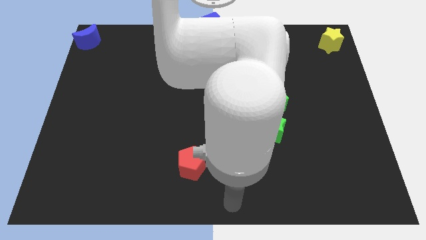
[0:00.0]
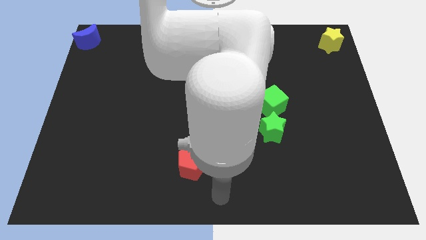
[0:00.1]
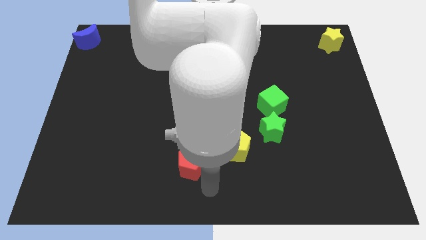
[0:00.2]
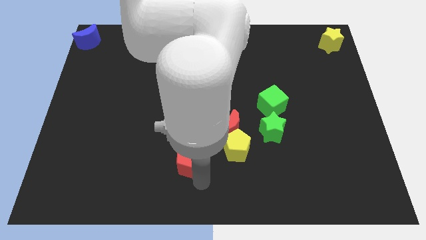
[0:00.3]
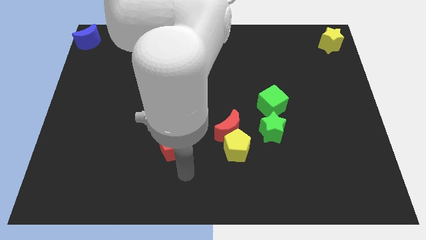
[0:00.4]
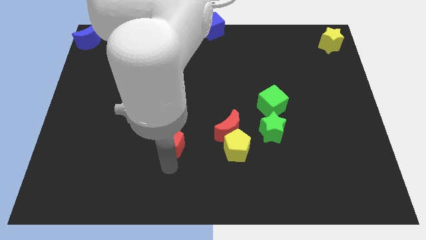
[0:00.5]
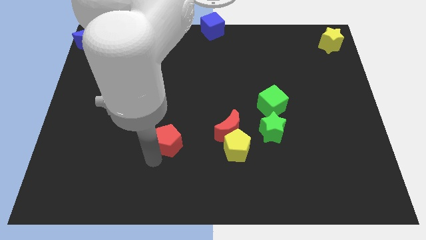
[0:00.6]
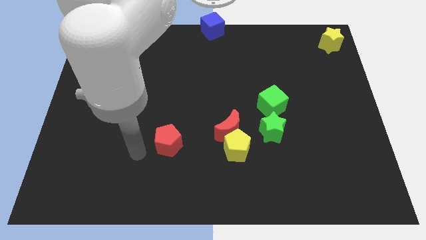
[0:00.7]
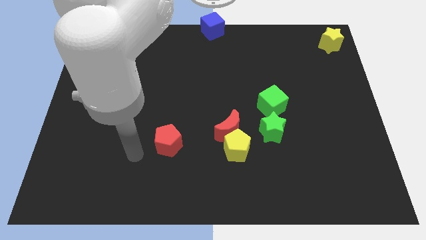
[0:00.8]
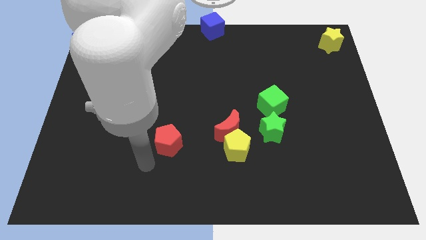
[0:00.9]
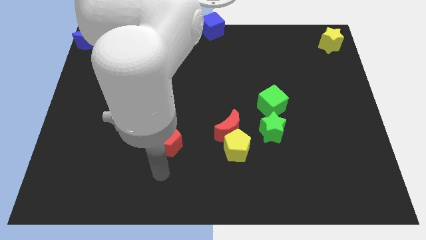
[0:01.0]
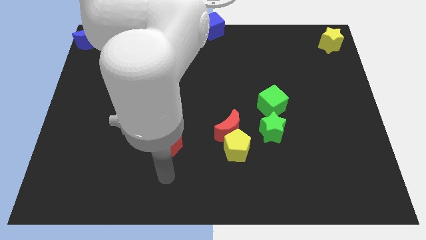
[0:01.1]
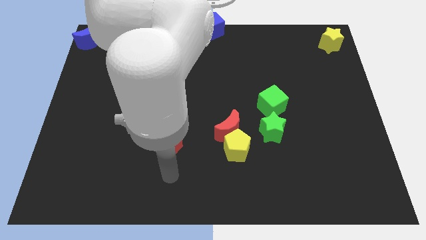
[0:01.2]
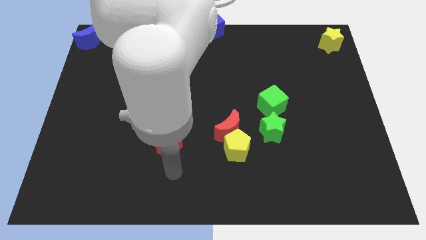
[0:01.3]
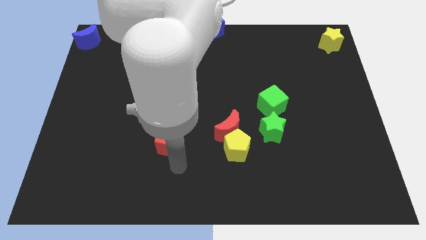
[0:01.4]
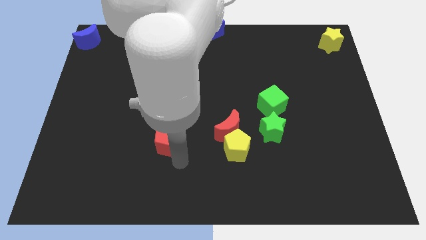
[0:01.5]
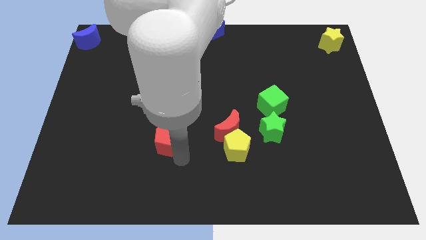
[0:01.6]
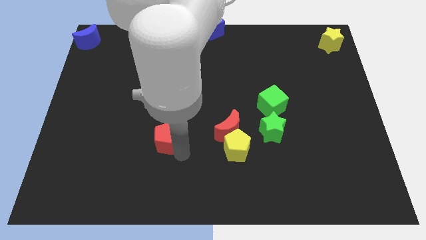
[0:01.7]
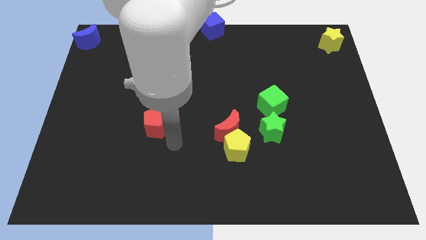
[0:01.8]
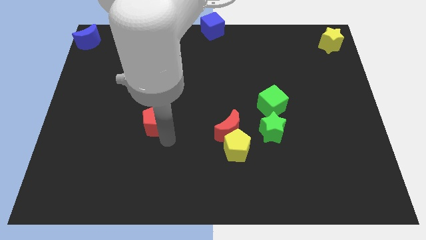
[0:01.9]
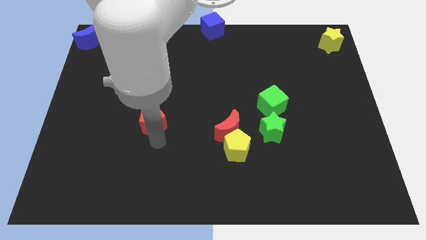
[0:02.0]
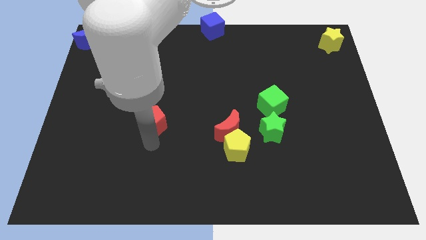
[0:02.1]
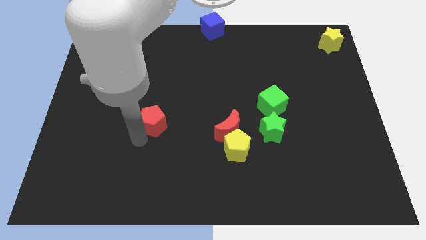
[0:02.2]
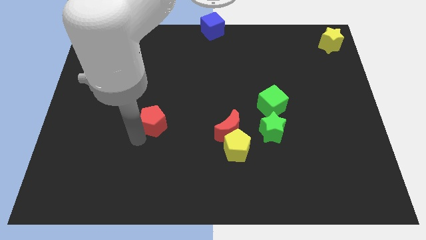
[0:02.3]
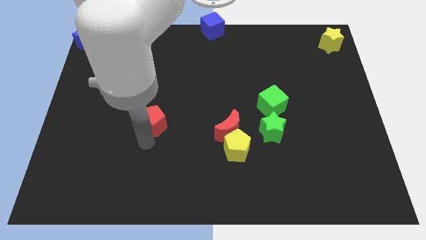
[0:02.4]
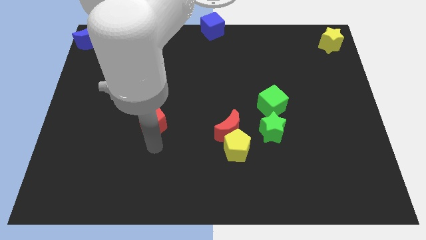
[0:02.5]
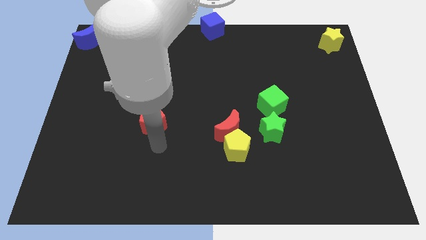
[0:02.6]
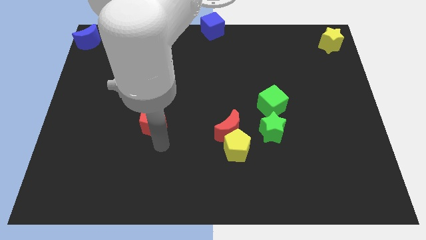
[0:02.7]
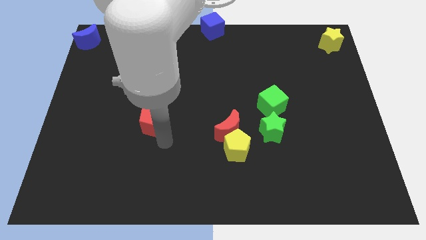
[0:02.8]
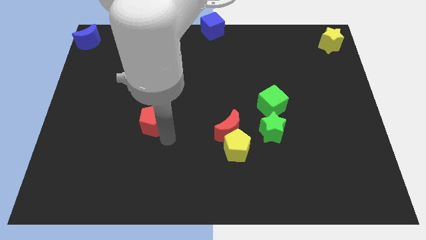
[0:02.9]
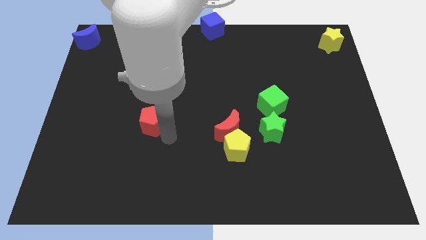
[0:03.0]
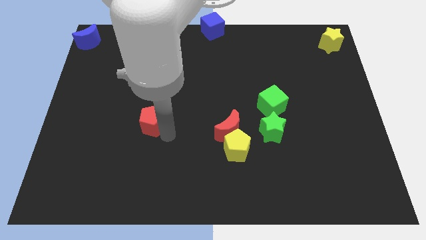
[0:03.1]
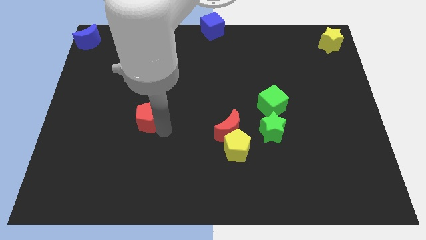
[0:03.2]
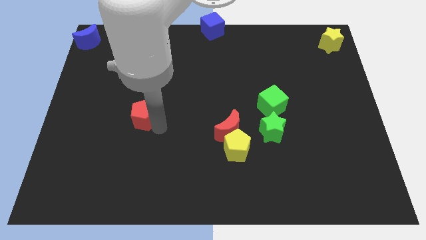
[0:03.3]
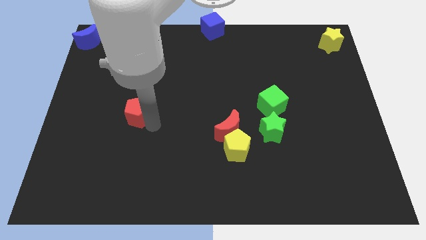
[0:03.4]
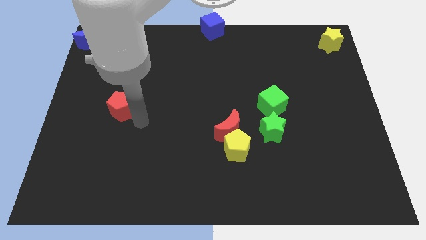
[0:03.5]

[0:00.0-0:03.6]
move the red pentagon slightly towards the center left of the board

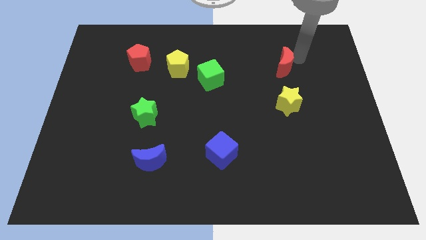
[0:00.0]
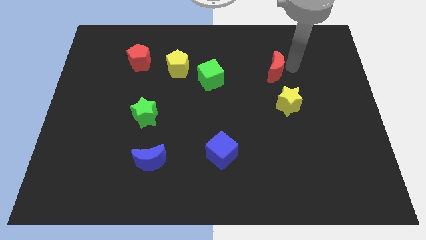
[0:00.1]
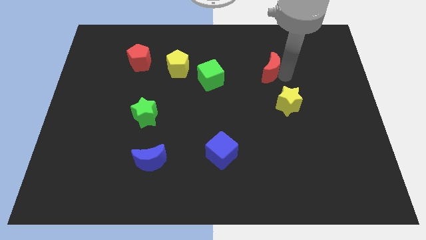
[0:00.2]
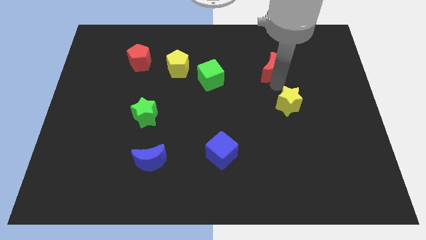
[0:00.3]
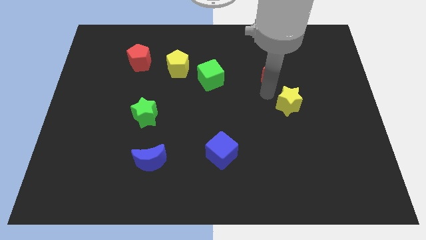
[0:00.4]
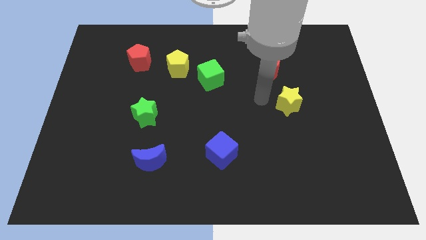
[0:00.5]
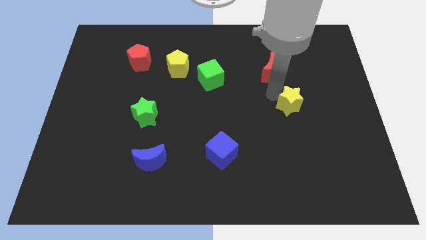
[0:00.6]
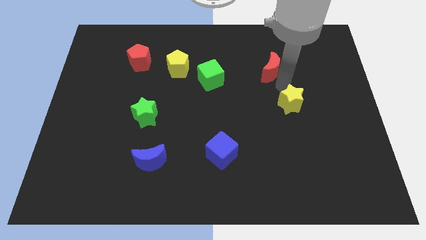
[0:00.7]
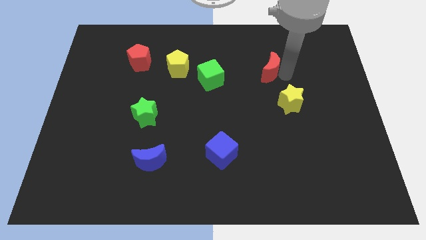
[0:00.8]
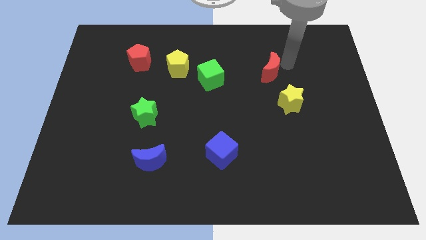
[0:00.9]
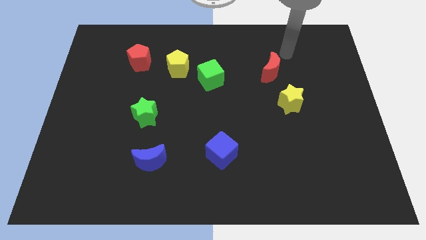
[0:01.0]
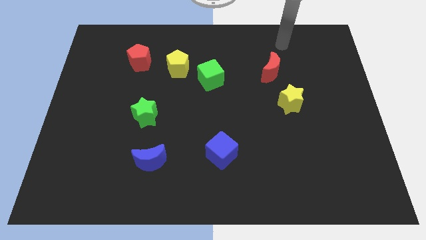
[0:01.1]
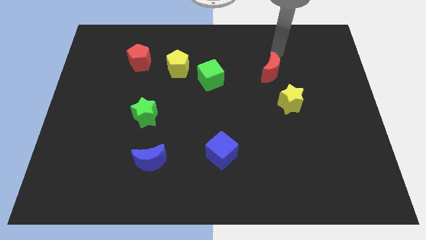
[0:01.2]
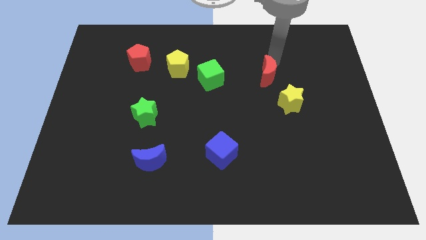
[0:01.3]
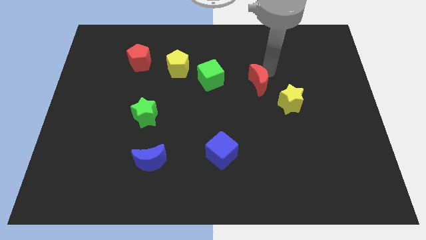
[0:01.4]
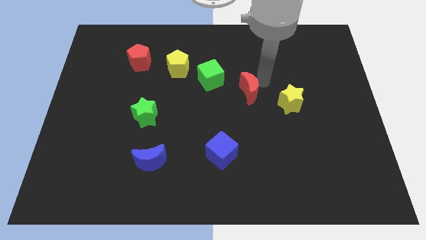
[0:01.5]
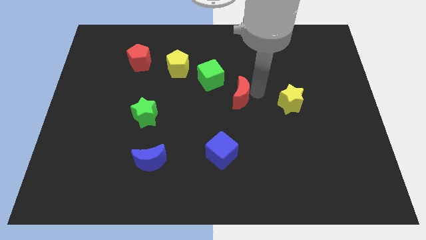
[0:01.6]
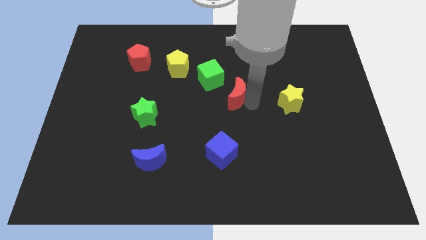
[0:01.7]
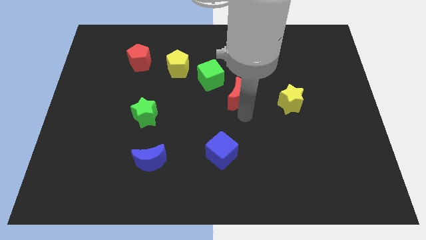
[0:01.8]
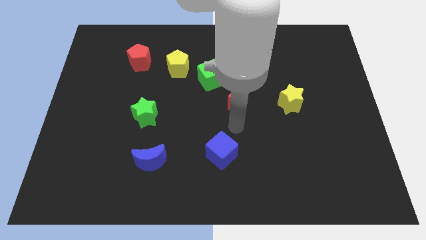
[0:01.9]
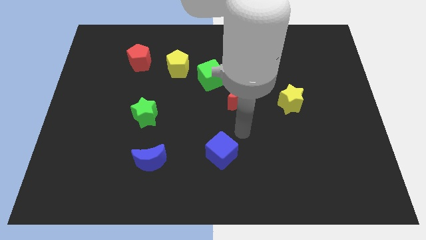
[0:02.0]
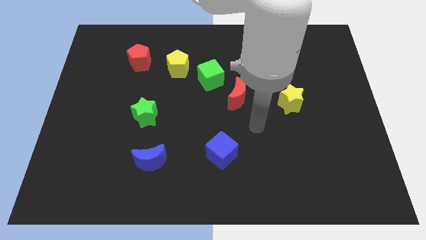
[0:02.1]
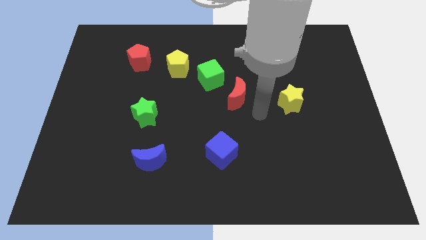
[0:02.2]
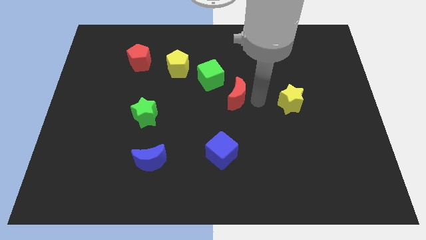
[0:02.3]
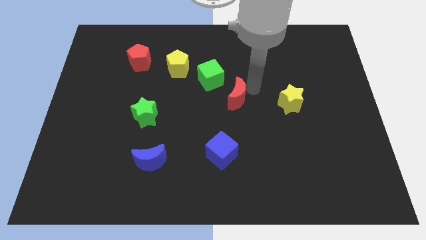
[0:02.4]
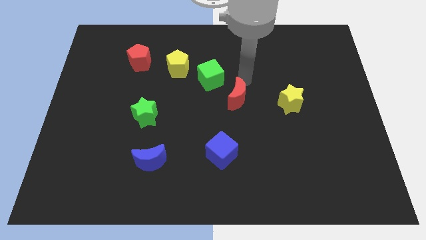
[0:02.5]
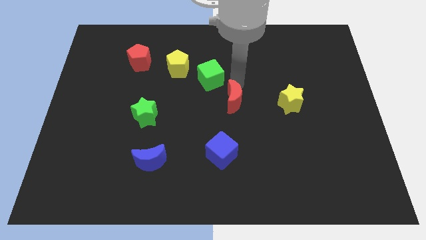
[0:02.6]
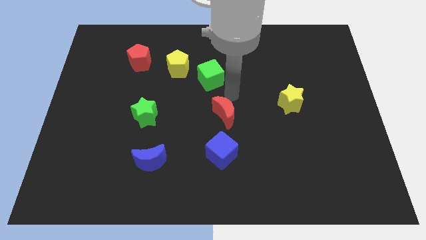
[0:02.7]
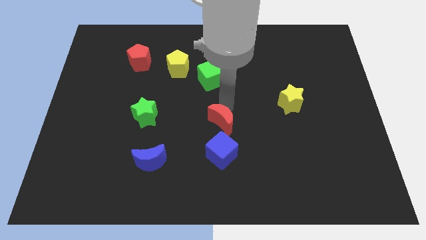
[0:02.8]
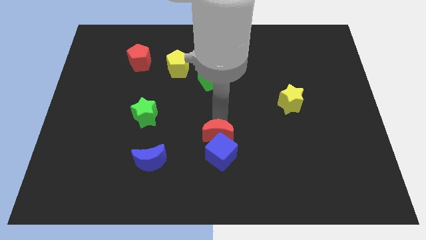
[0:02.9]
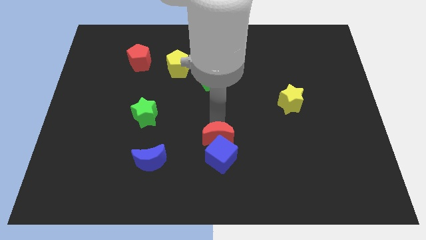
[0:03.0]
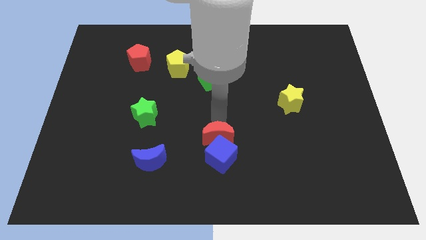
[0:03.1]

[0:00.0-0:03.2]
push red crescent above blue cube

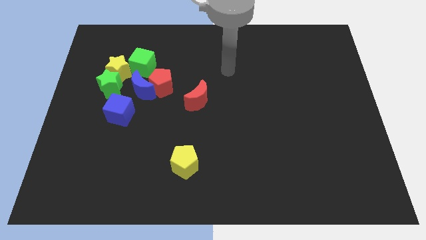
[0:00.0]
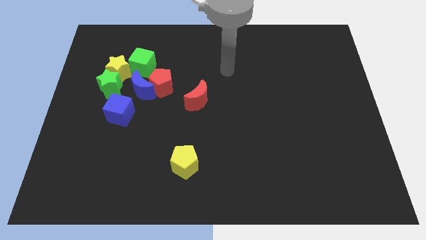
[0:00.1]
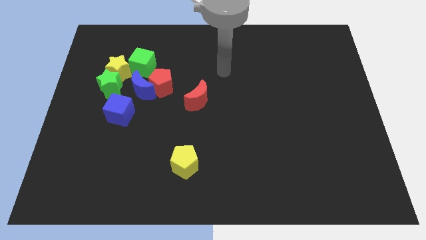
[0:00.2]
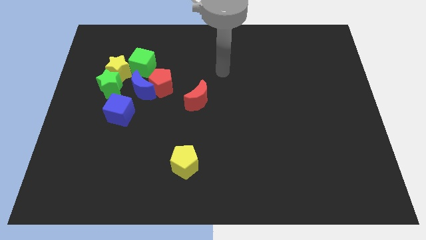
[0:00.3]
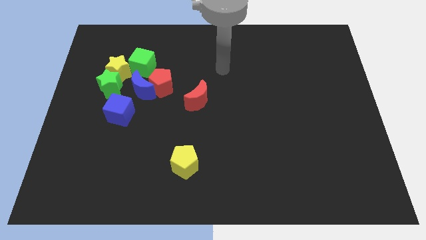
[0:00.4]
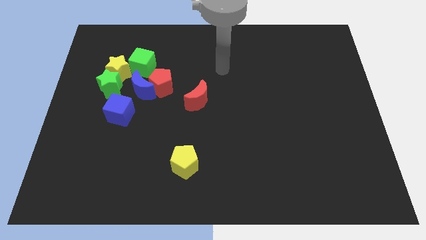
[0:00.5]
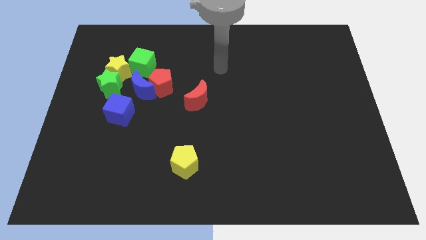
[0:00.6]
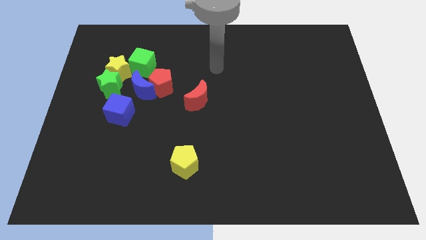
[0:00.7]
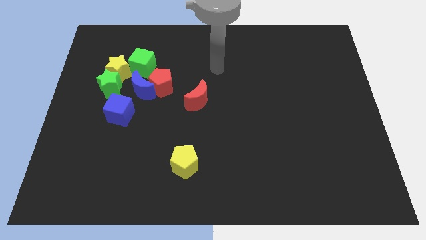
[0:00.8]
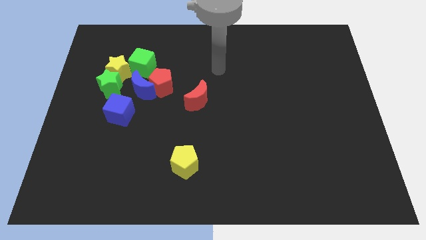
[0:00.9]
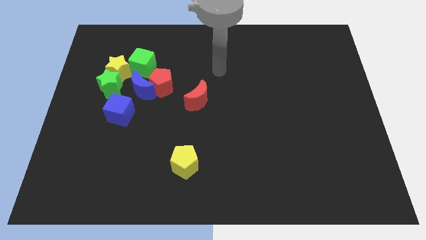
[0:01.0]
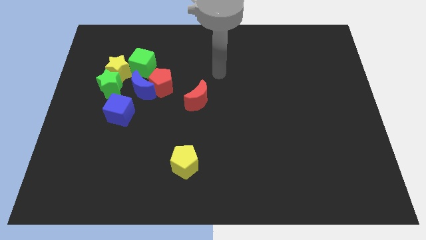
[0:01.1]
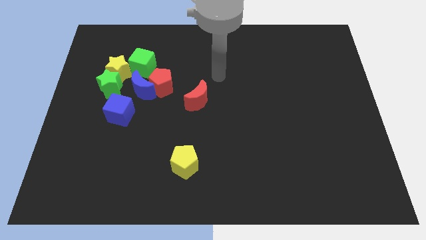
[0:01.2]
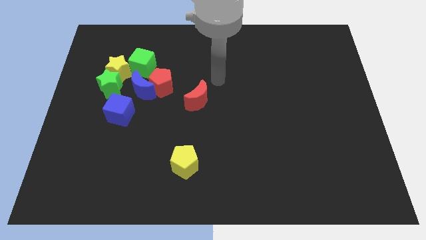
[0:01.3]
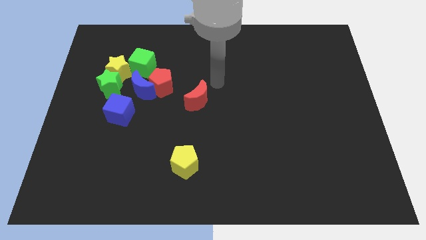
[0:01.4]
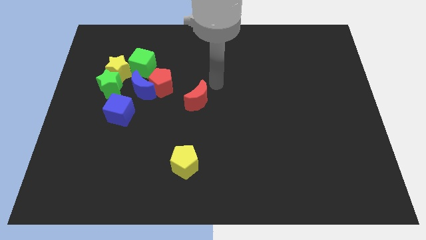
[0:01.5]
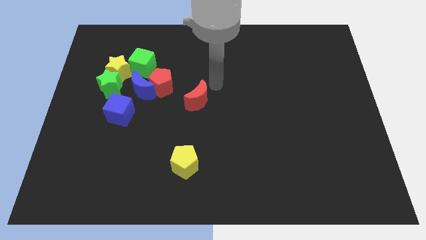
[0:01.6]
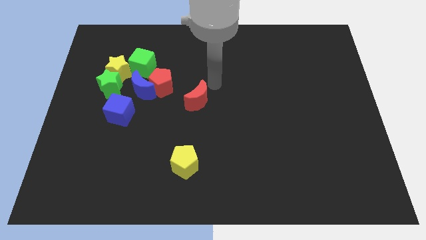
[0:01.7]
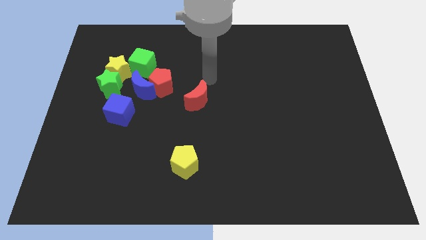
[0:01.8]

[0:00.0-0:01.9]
place your arm to the top of the red moon

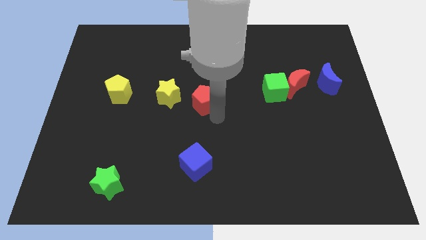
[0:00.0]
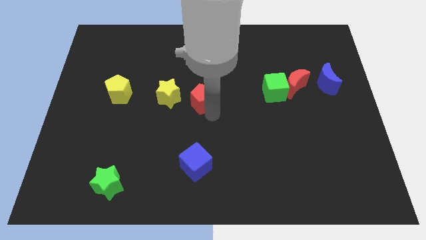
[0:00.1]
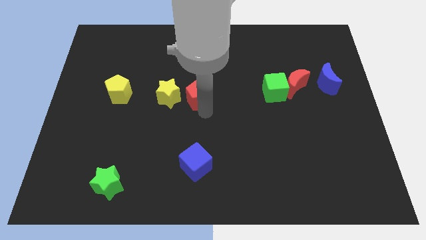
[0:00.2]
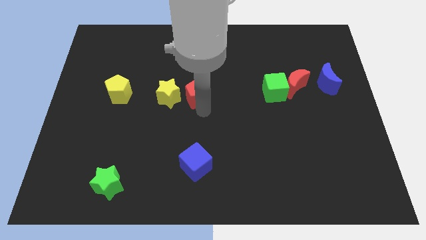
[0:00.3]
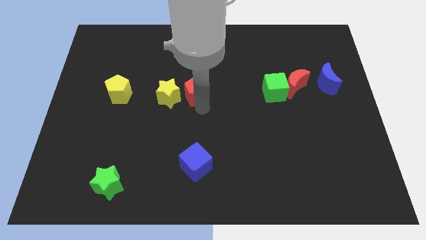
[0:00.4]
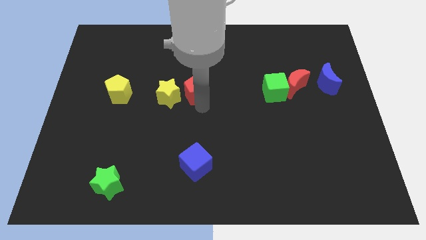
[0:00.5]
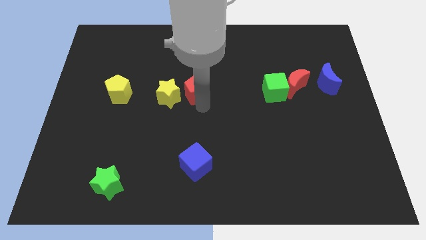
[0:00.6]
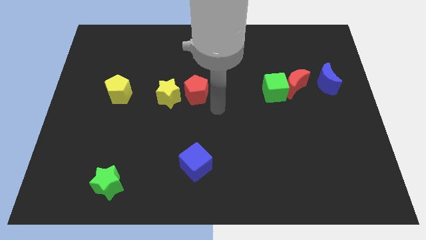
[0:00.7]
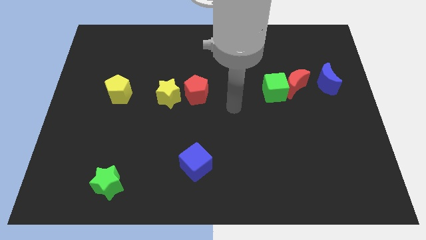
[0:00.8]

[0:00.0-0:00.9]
push the red pentagon slightly close to the yellow star
